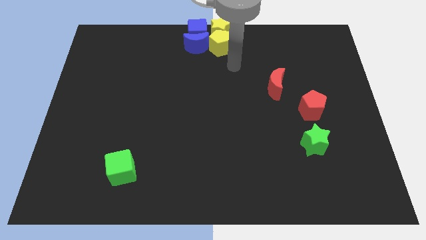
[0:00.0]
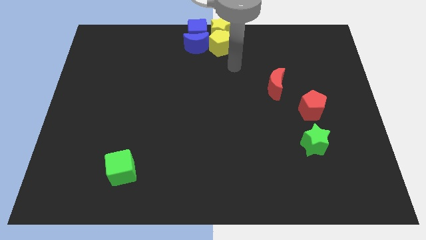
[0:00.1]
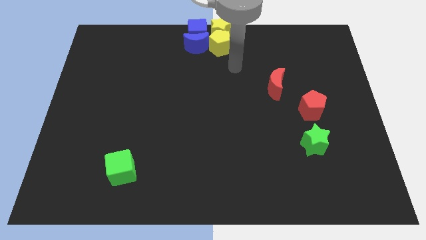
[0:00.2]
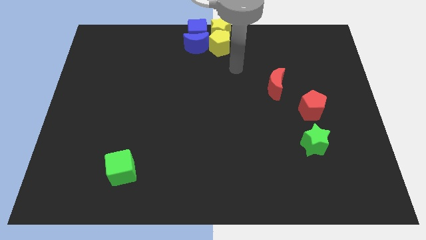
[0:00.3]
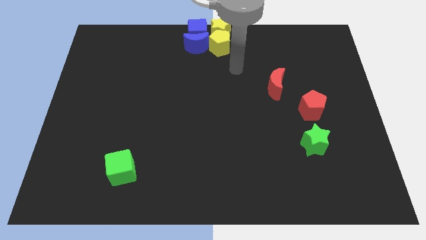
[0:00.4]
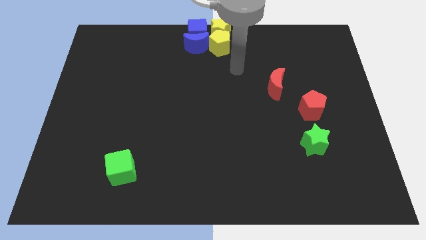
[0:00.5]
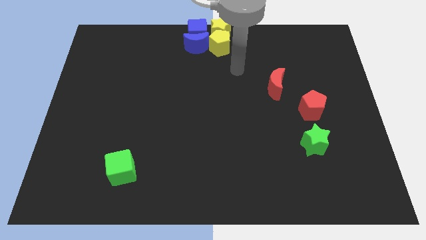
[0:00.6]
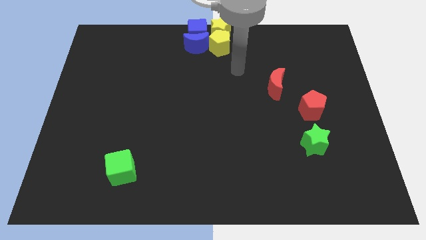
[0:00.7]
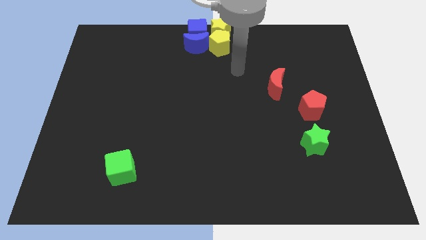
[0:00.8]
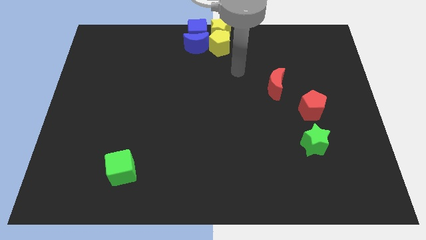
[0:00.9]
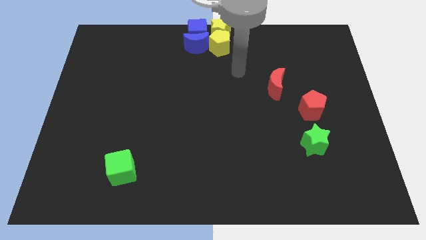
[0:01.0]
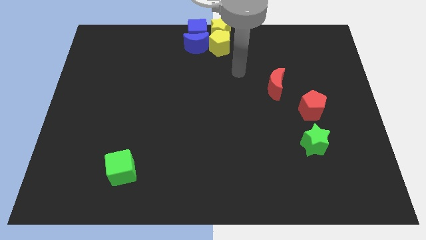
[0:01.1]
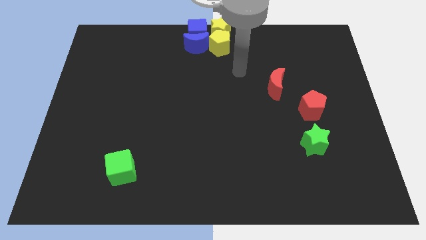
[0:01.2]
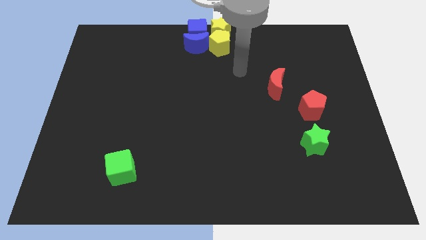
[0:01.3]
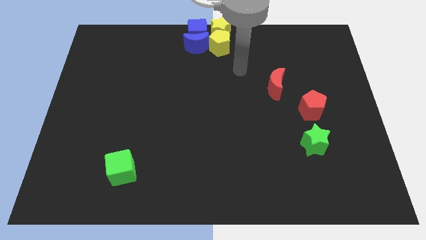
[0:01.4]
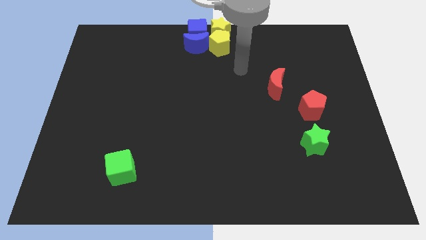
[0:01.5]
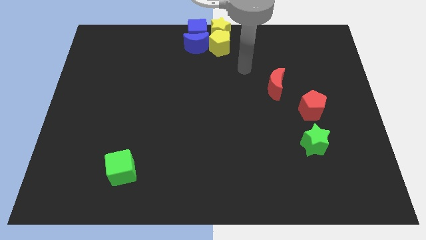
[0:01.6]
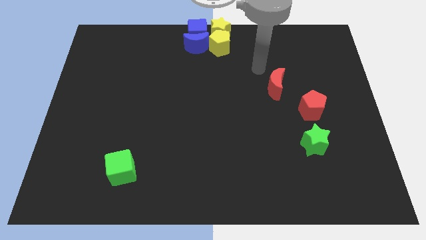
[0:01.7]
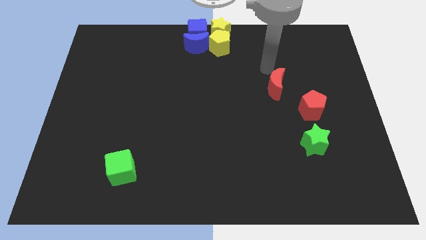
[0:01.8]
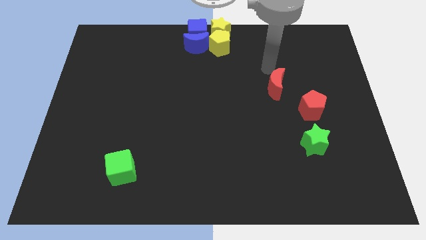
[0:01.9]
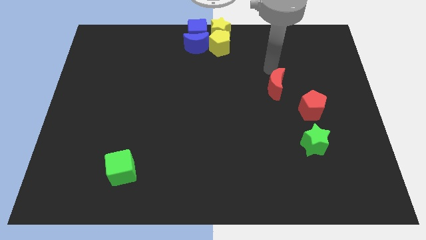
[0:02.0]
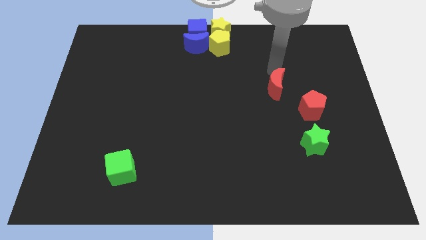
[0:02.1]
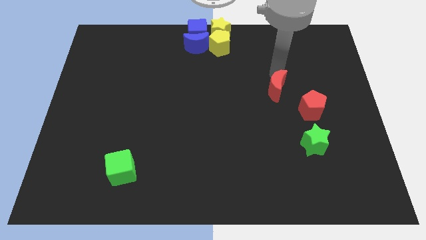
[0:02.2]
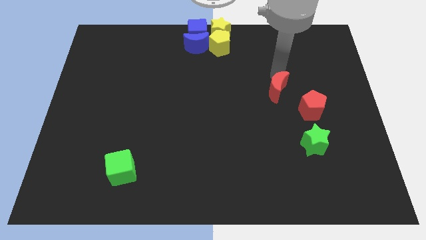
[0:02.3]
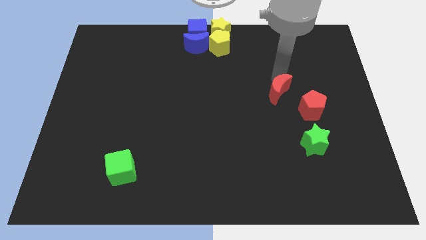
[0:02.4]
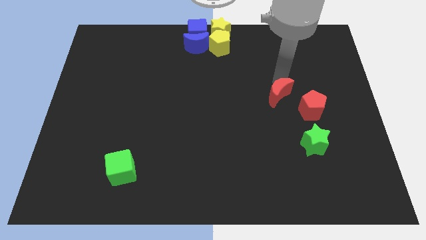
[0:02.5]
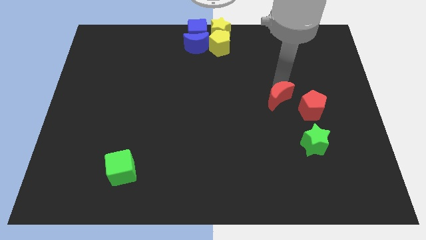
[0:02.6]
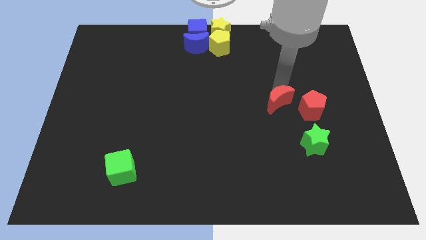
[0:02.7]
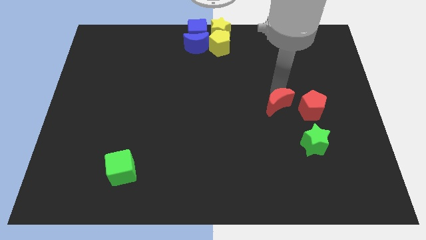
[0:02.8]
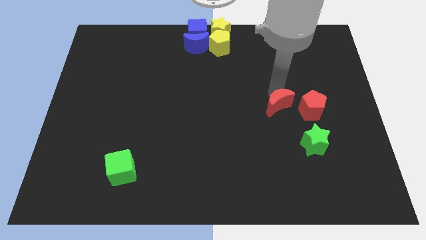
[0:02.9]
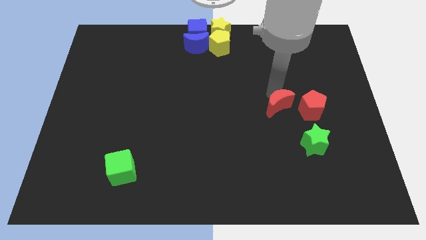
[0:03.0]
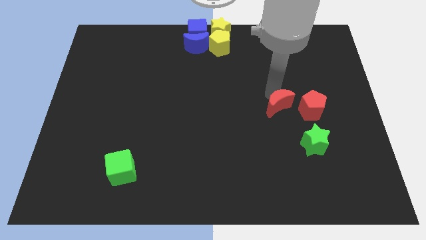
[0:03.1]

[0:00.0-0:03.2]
move the red moon to the left side of the red pentagon

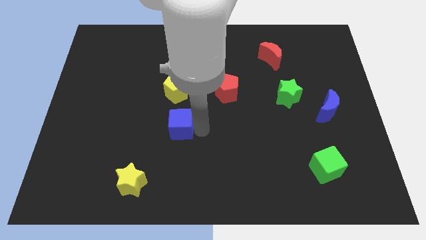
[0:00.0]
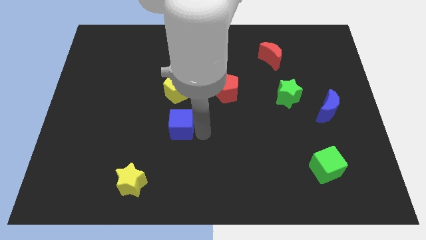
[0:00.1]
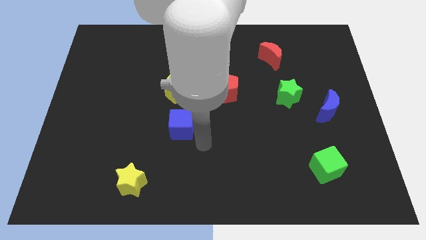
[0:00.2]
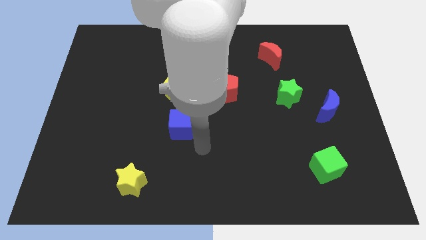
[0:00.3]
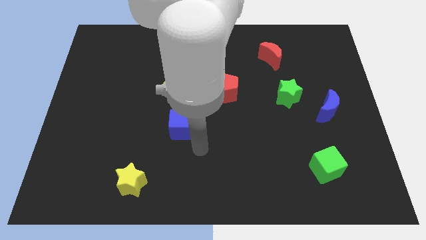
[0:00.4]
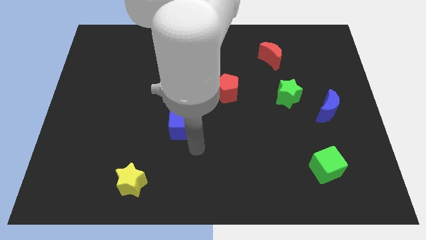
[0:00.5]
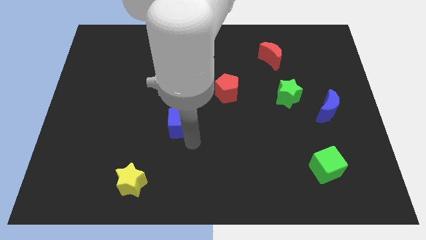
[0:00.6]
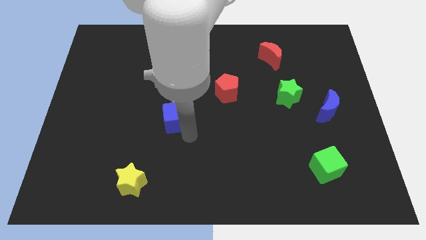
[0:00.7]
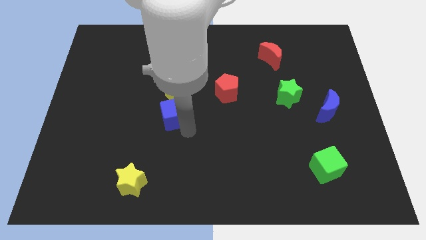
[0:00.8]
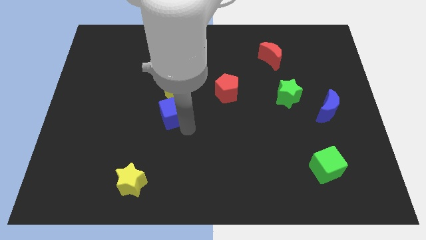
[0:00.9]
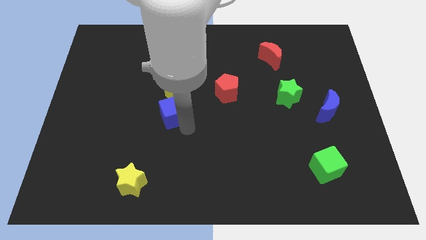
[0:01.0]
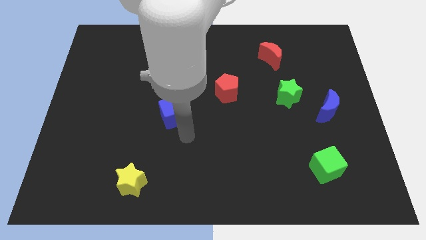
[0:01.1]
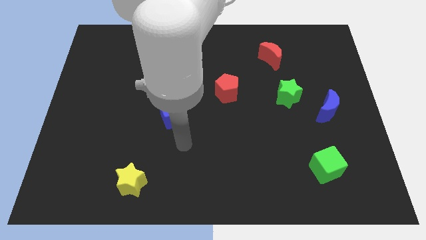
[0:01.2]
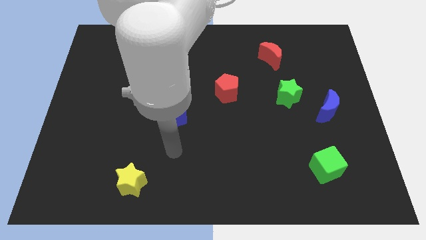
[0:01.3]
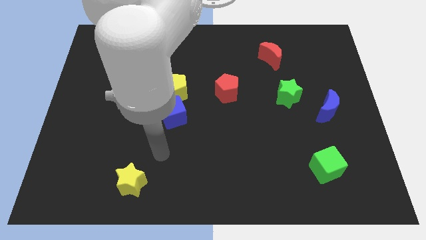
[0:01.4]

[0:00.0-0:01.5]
push blue cube into yellow pentagon

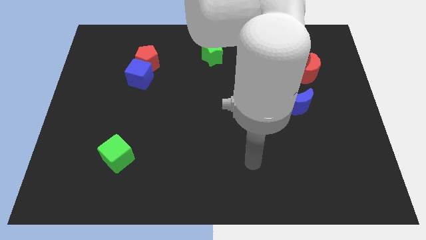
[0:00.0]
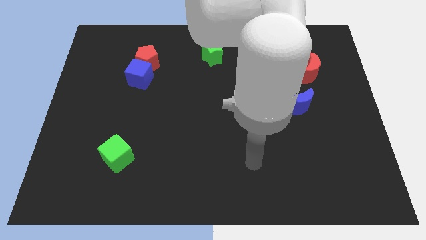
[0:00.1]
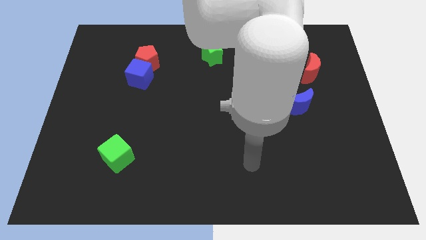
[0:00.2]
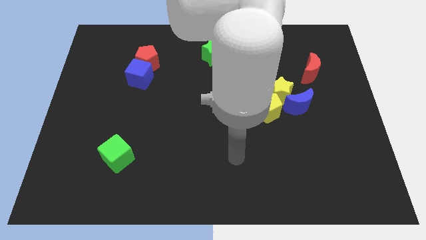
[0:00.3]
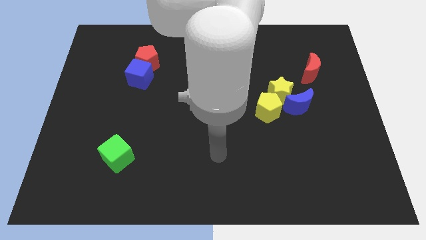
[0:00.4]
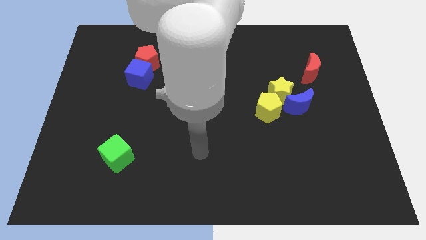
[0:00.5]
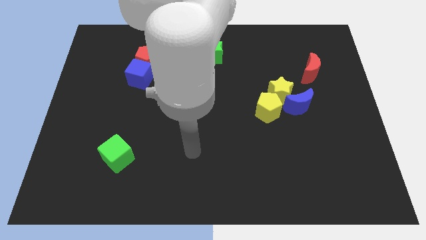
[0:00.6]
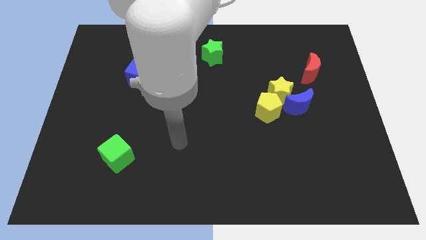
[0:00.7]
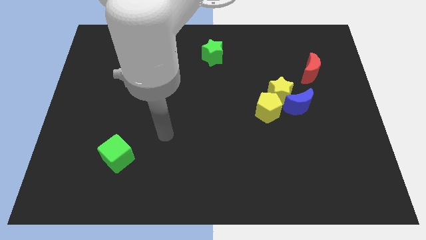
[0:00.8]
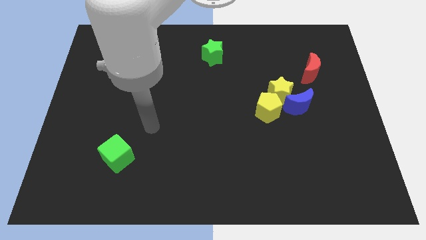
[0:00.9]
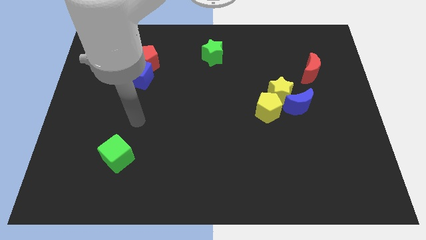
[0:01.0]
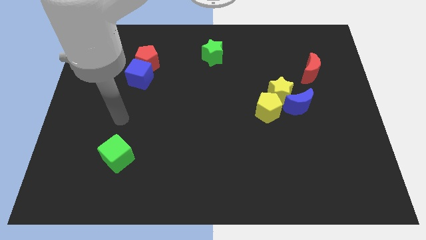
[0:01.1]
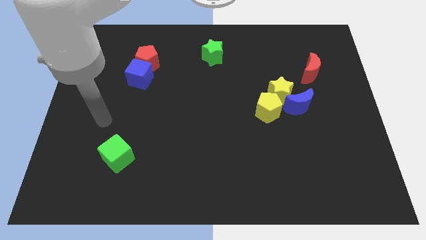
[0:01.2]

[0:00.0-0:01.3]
point your arm above the green cube

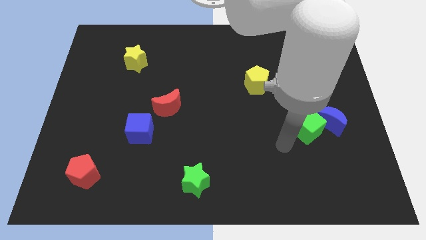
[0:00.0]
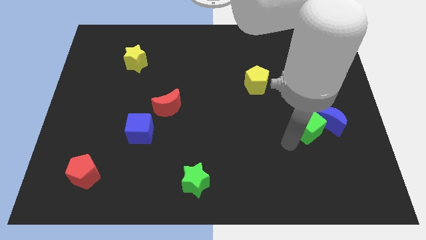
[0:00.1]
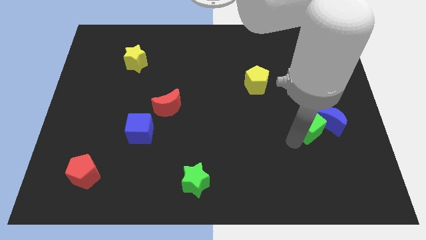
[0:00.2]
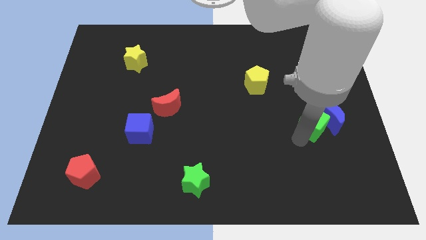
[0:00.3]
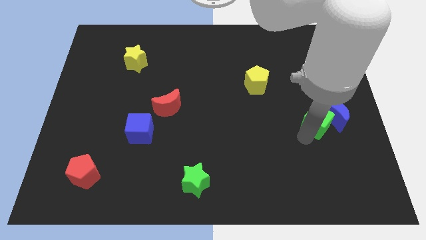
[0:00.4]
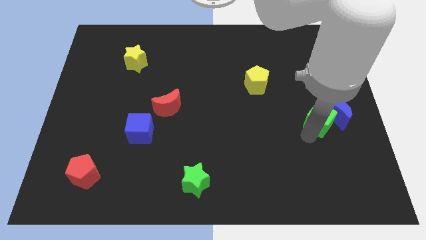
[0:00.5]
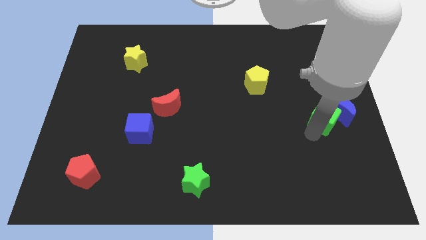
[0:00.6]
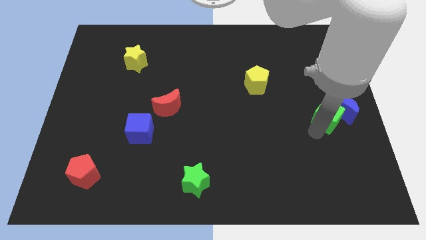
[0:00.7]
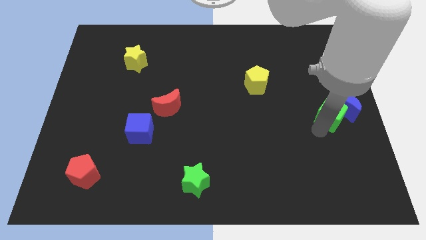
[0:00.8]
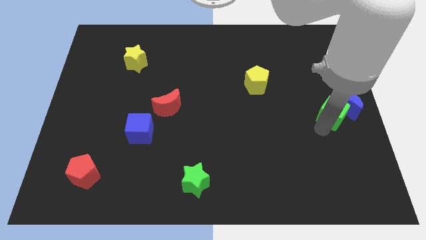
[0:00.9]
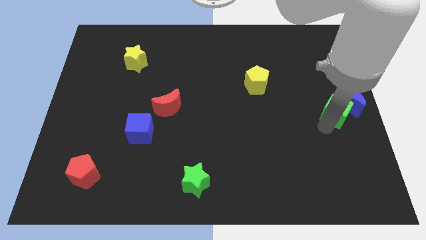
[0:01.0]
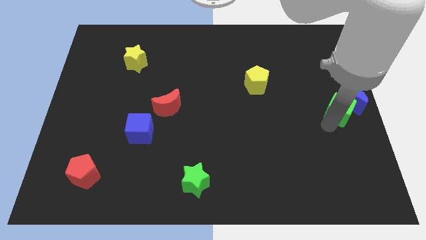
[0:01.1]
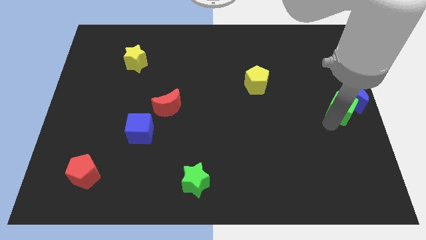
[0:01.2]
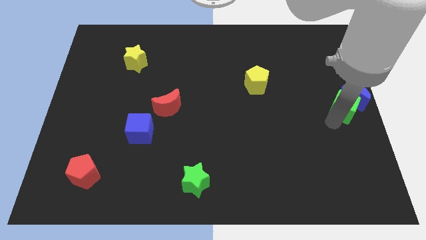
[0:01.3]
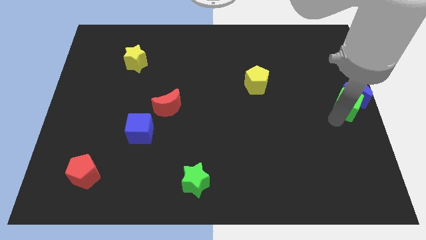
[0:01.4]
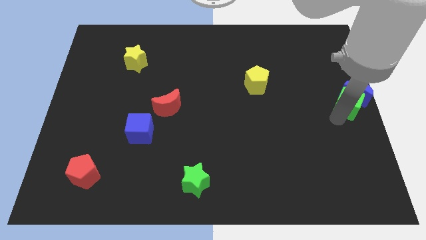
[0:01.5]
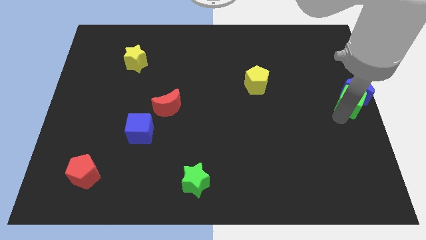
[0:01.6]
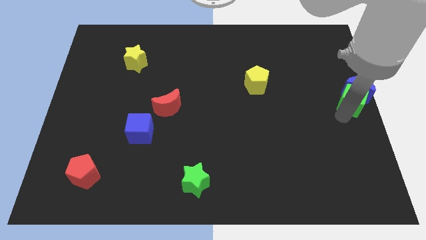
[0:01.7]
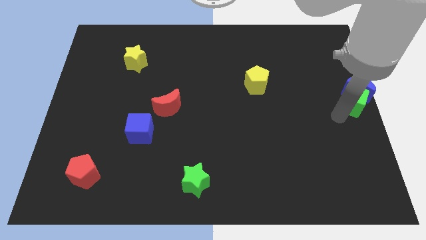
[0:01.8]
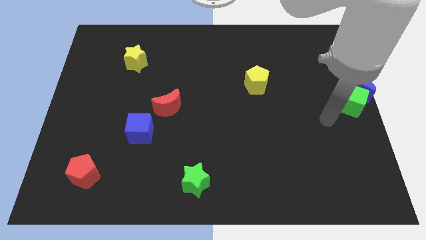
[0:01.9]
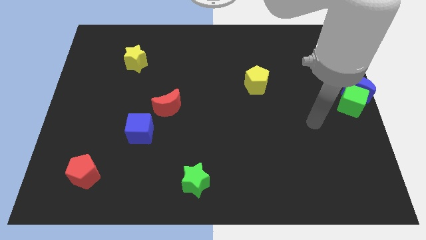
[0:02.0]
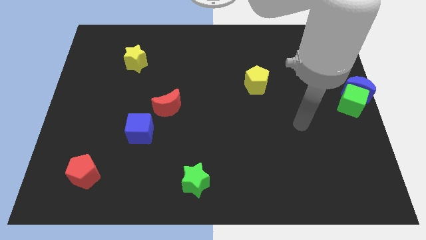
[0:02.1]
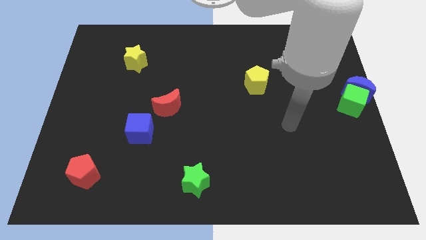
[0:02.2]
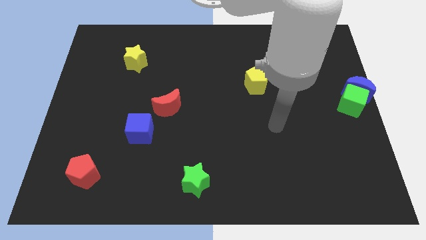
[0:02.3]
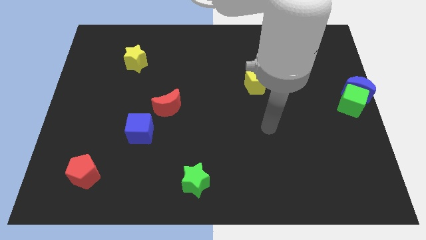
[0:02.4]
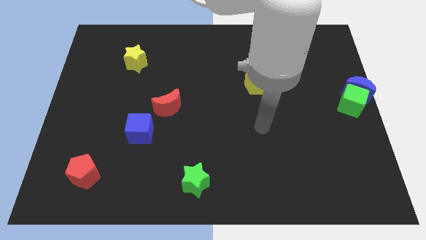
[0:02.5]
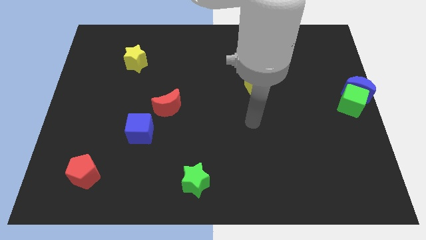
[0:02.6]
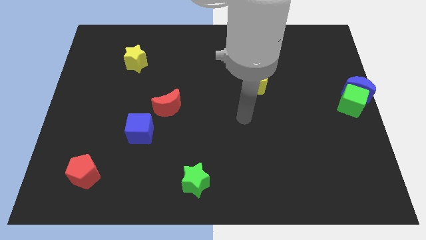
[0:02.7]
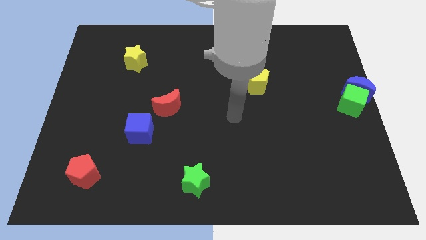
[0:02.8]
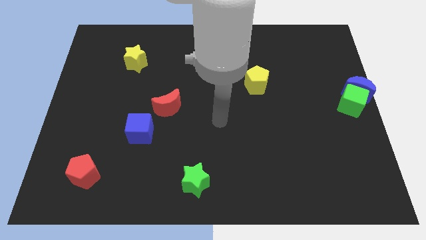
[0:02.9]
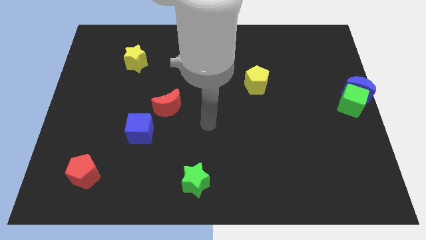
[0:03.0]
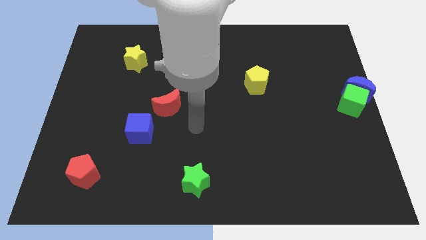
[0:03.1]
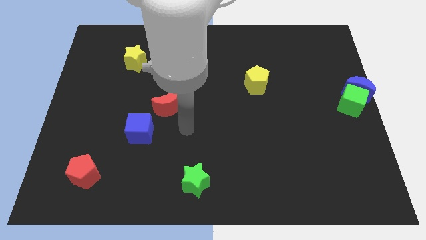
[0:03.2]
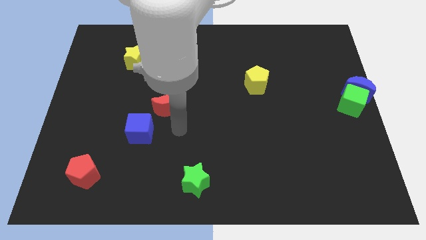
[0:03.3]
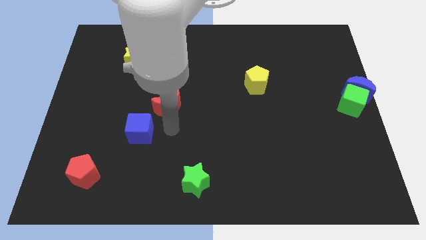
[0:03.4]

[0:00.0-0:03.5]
push the green cube to the right center along with the blue crescent
